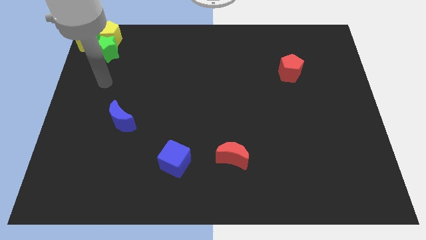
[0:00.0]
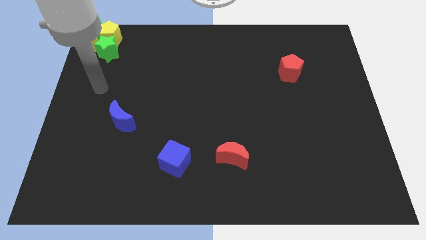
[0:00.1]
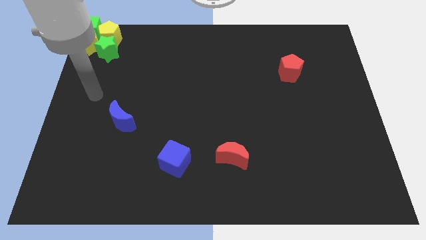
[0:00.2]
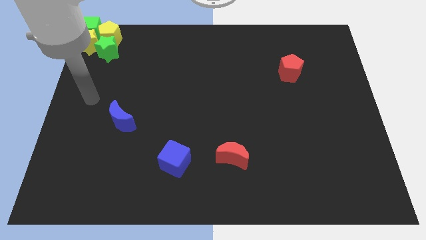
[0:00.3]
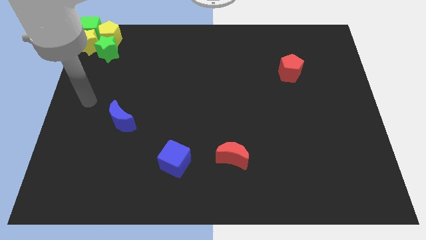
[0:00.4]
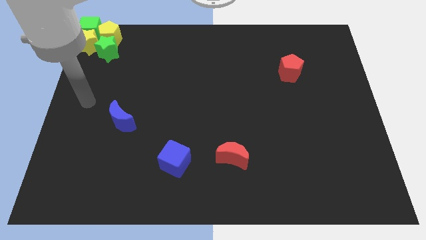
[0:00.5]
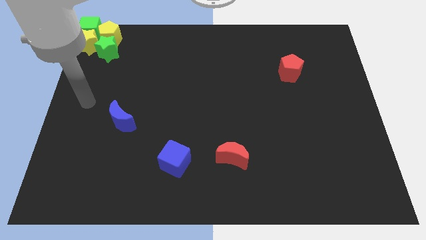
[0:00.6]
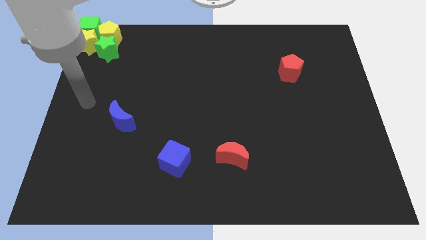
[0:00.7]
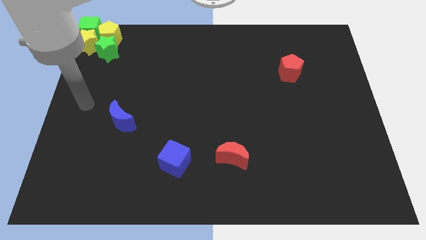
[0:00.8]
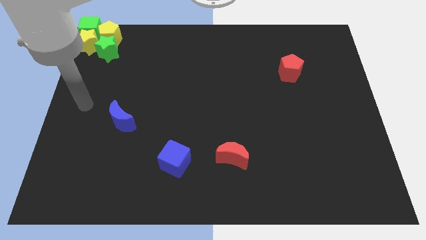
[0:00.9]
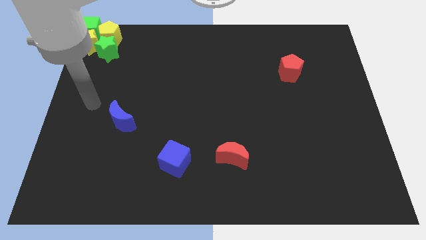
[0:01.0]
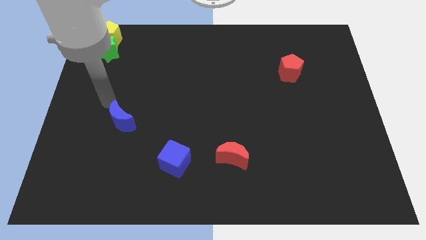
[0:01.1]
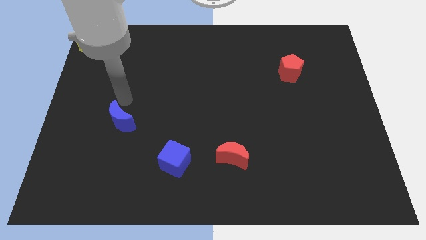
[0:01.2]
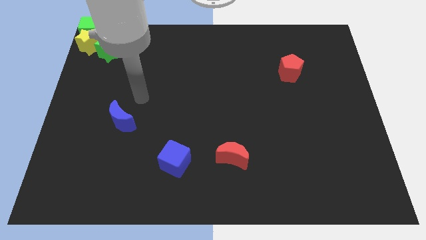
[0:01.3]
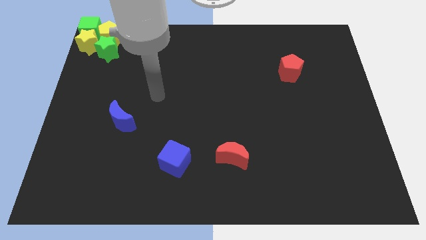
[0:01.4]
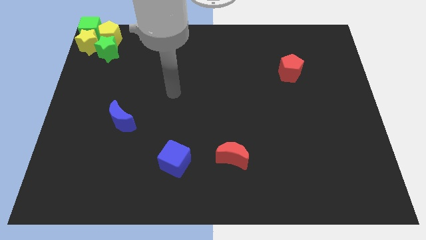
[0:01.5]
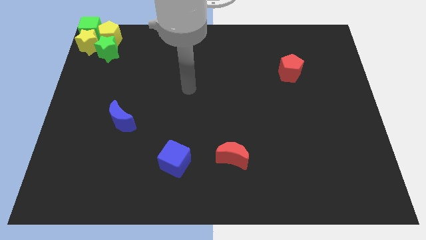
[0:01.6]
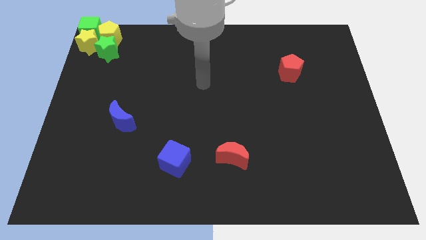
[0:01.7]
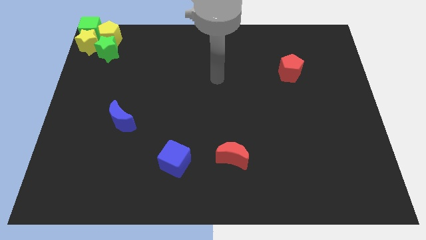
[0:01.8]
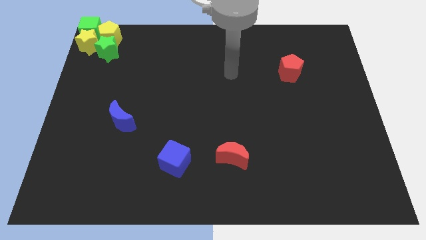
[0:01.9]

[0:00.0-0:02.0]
move your hand towards red pentagon

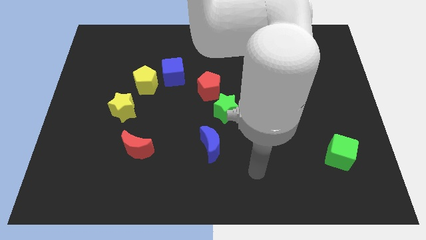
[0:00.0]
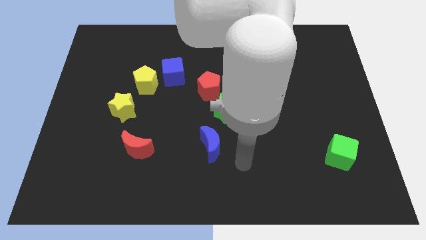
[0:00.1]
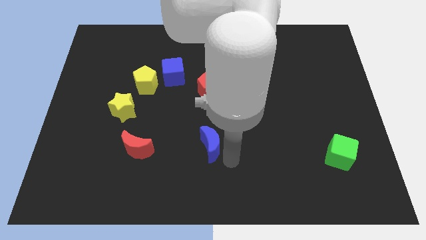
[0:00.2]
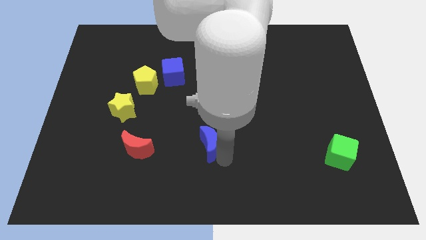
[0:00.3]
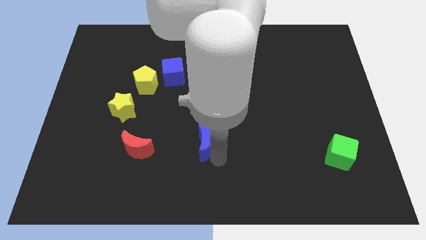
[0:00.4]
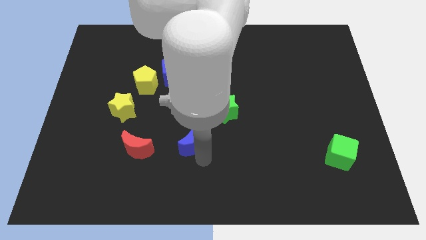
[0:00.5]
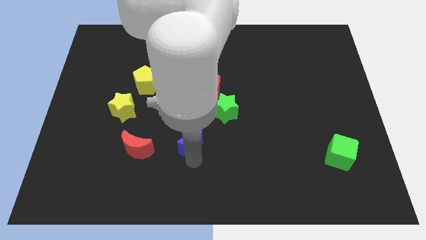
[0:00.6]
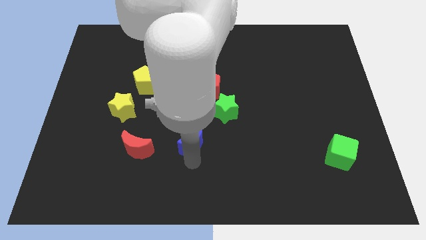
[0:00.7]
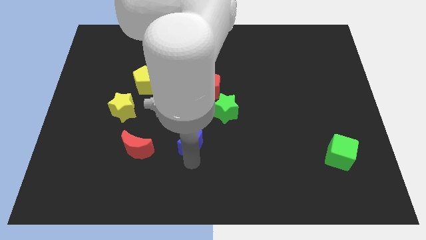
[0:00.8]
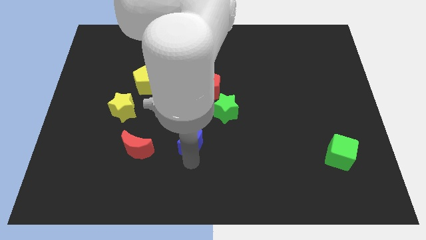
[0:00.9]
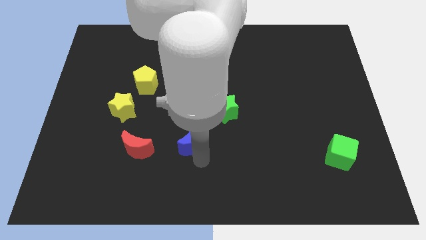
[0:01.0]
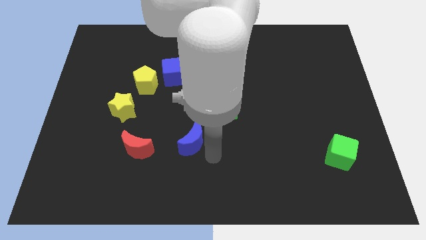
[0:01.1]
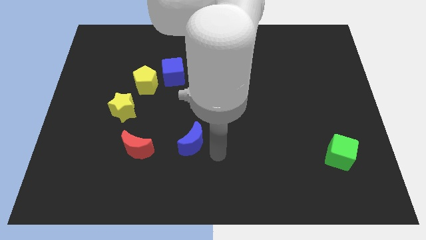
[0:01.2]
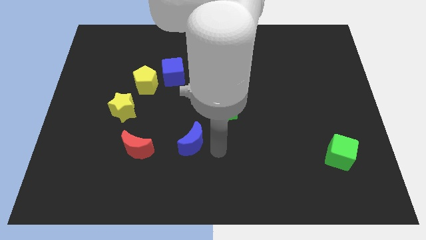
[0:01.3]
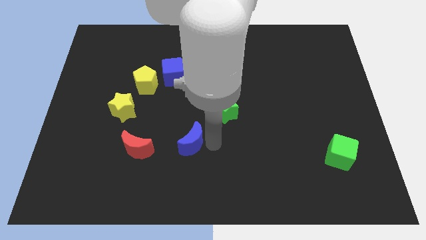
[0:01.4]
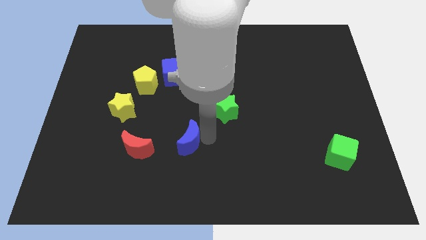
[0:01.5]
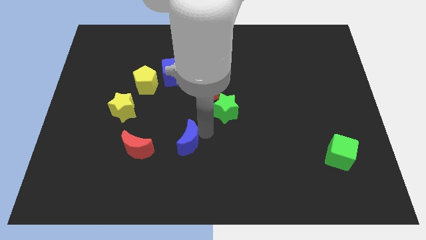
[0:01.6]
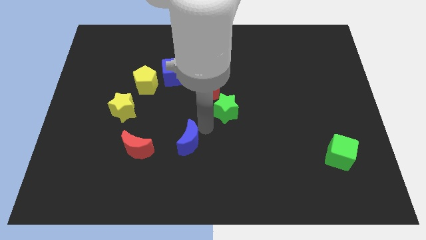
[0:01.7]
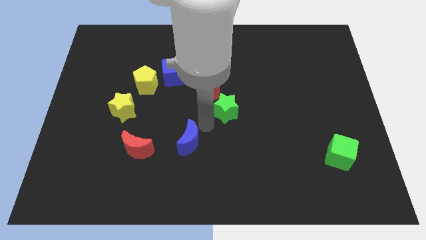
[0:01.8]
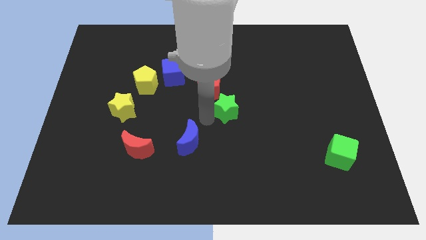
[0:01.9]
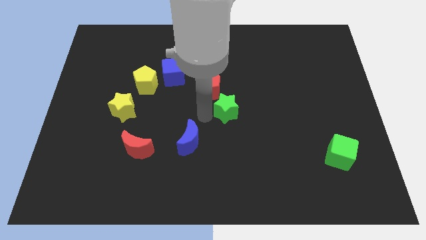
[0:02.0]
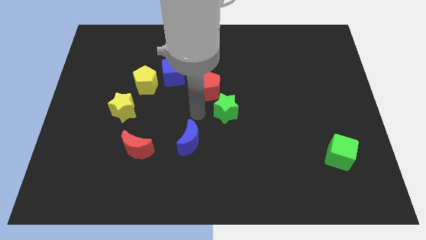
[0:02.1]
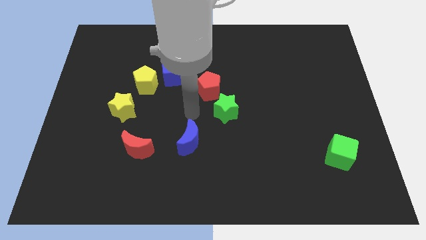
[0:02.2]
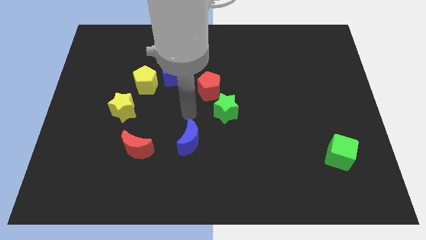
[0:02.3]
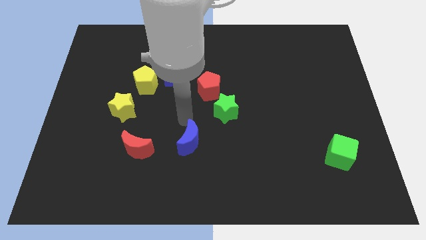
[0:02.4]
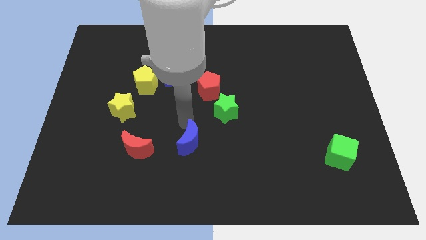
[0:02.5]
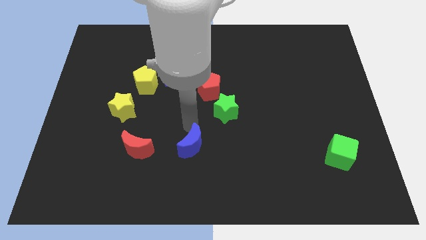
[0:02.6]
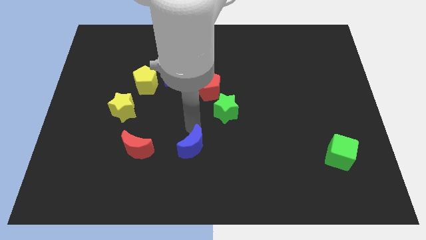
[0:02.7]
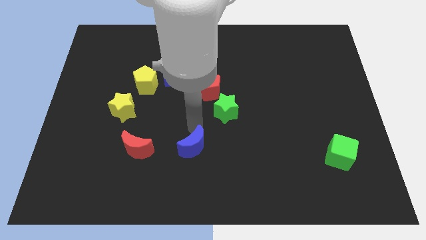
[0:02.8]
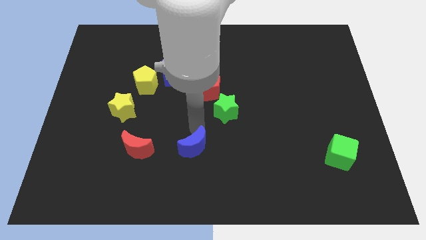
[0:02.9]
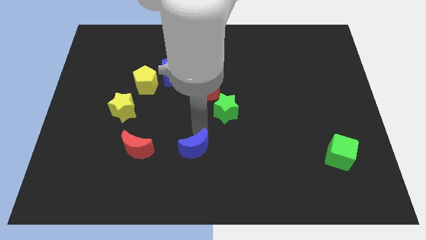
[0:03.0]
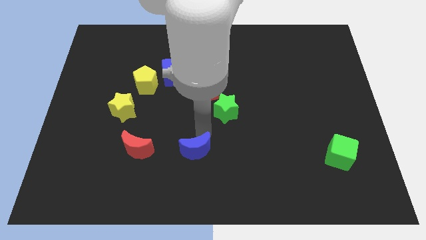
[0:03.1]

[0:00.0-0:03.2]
move the blue crescent to the right of red crescent

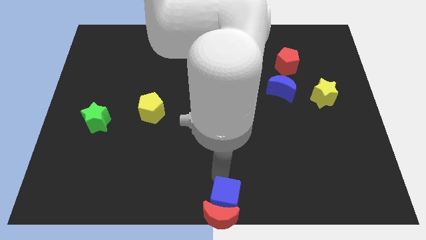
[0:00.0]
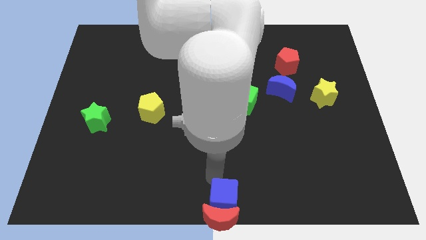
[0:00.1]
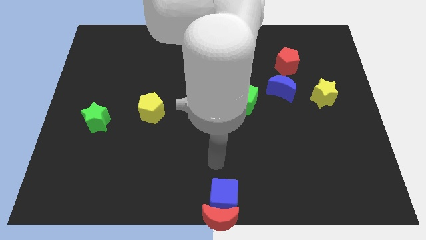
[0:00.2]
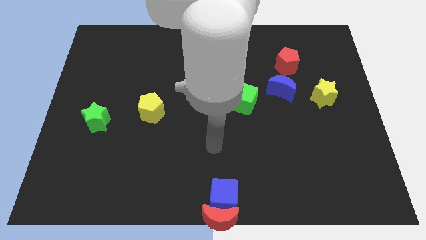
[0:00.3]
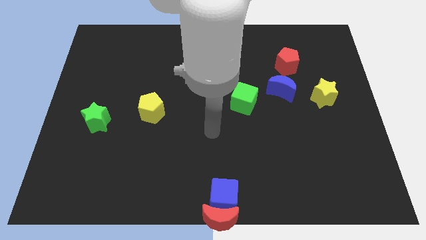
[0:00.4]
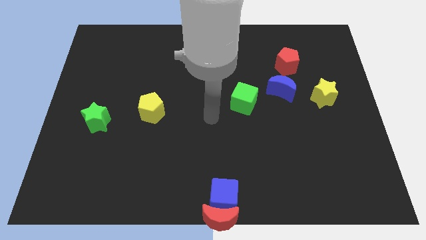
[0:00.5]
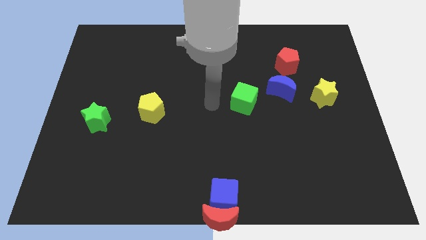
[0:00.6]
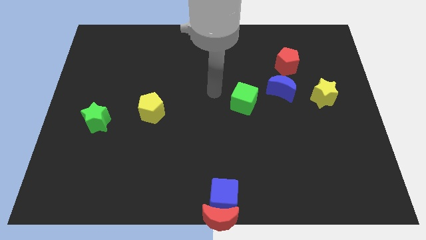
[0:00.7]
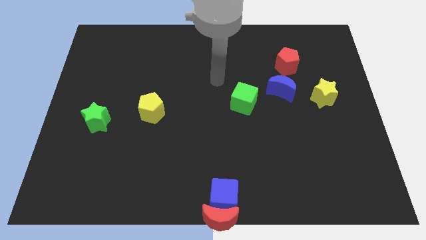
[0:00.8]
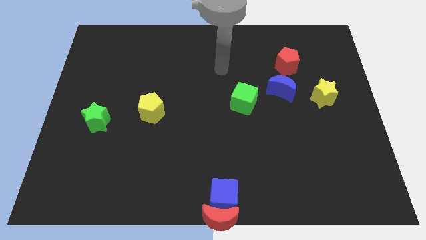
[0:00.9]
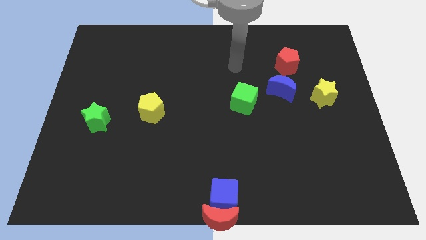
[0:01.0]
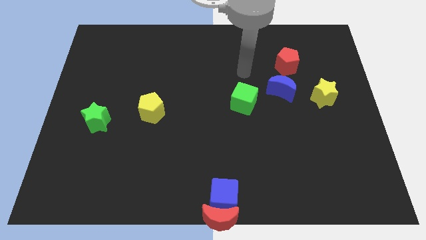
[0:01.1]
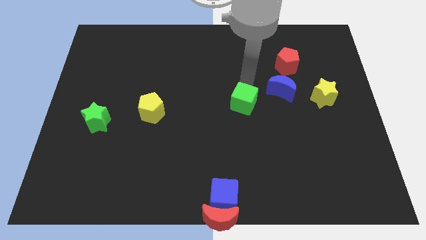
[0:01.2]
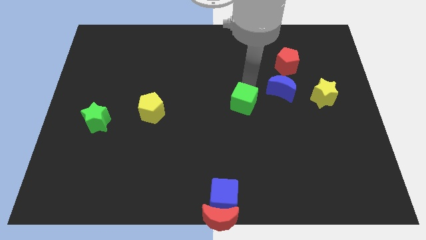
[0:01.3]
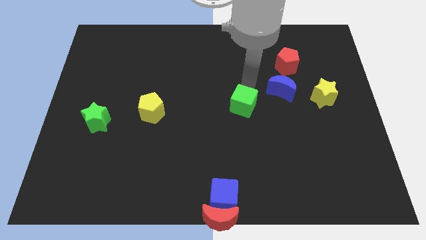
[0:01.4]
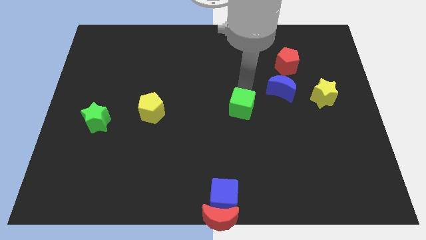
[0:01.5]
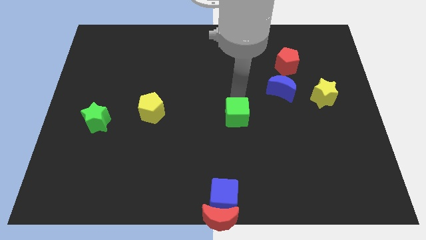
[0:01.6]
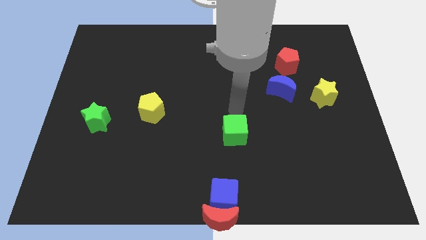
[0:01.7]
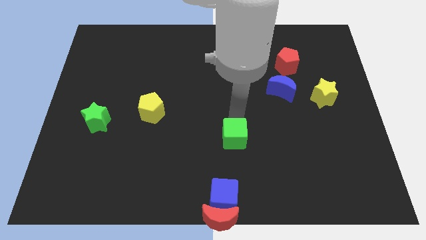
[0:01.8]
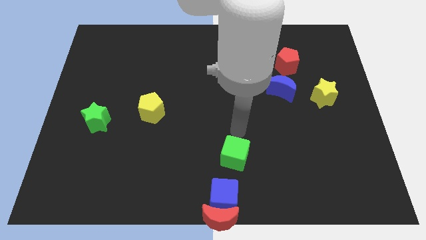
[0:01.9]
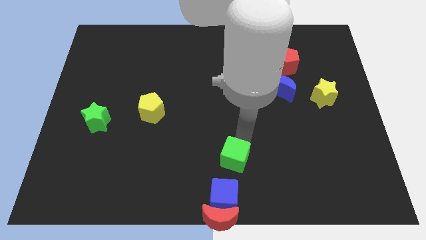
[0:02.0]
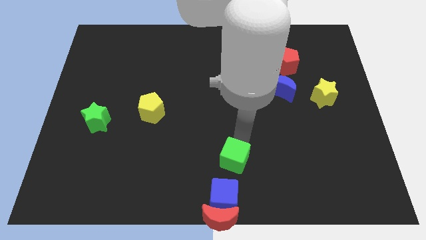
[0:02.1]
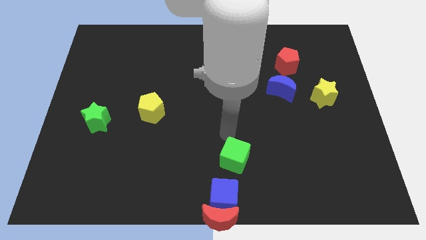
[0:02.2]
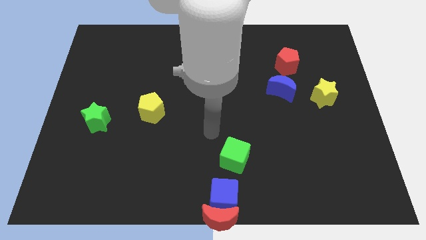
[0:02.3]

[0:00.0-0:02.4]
place the green cube above the blue cube

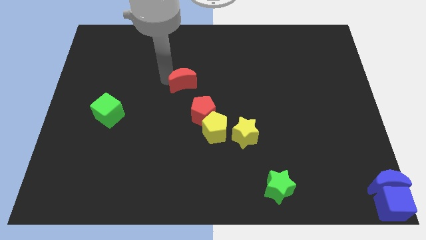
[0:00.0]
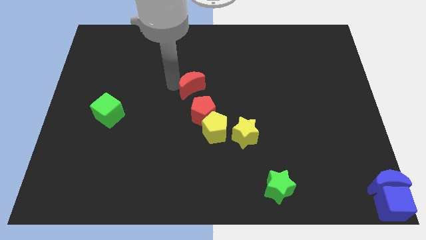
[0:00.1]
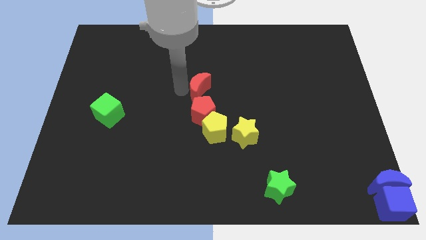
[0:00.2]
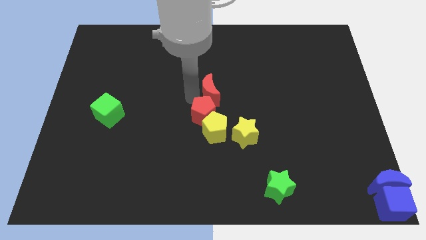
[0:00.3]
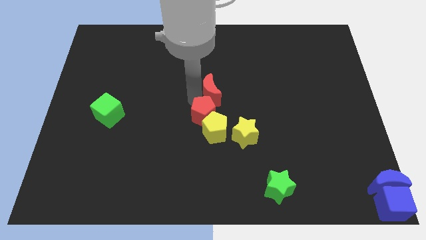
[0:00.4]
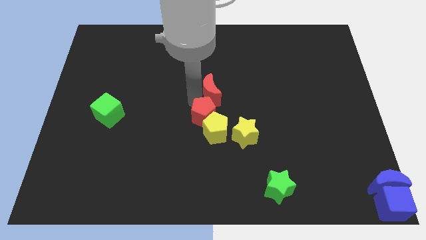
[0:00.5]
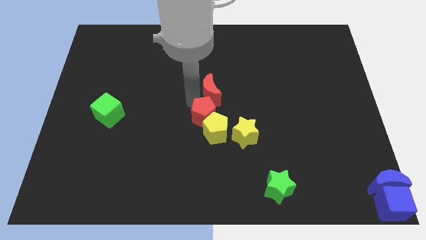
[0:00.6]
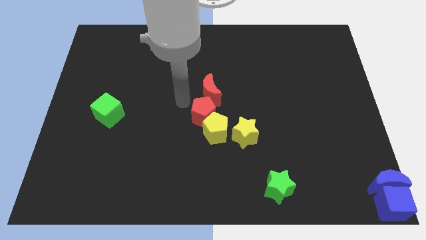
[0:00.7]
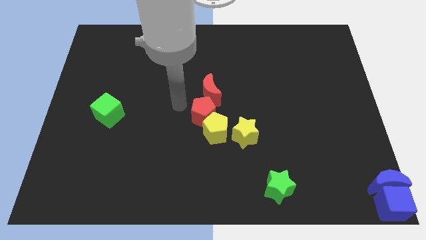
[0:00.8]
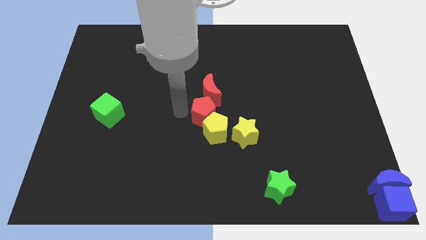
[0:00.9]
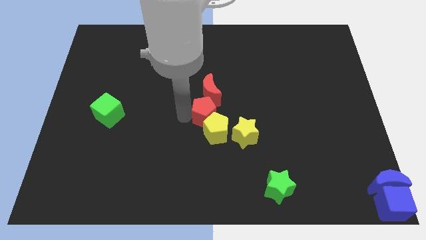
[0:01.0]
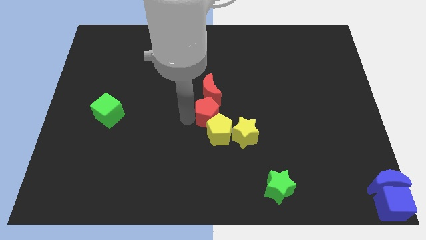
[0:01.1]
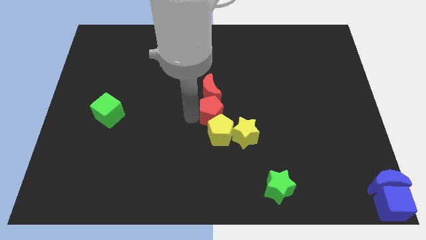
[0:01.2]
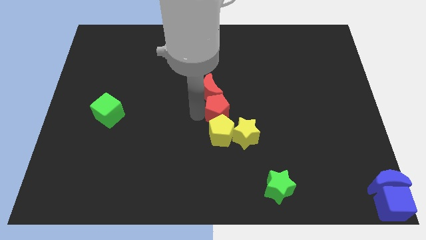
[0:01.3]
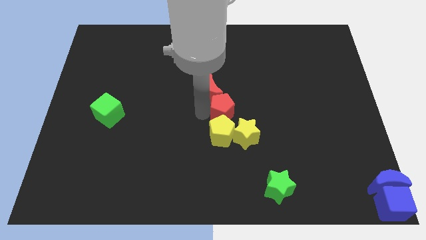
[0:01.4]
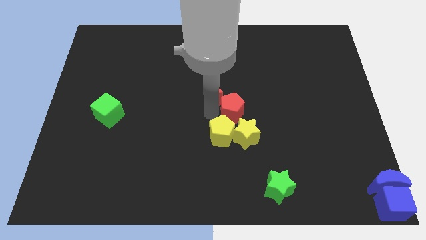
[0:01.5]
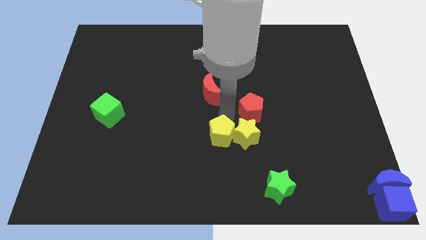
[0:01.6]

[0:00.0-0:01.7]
place red moon red pentagon to the center of the board
